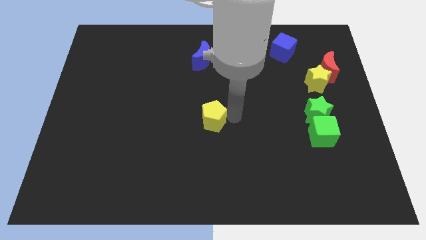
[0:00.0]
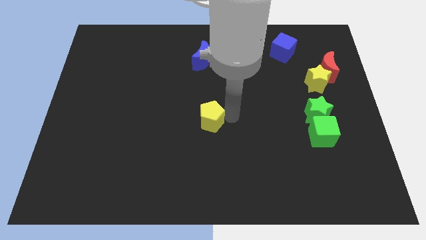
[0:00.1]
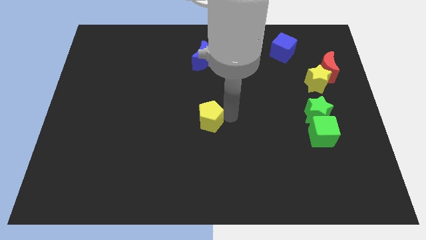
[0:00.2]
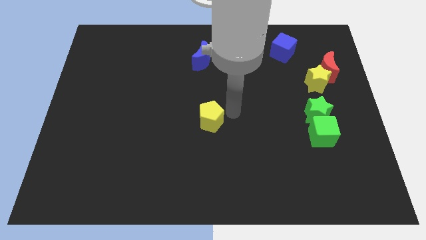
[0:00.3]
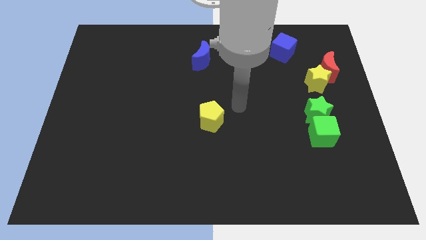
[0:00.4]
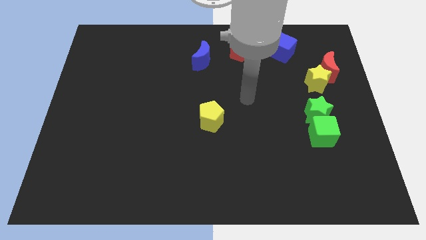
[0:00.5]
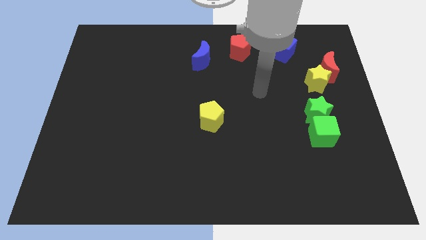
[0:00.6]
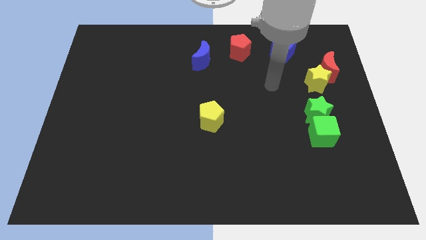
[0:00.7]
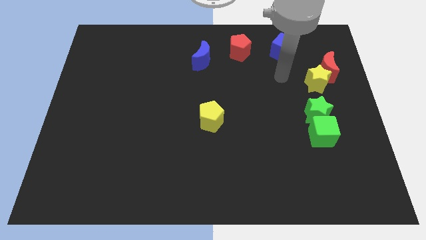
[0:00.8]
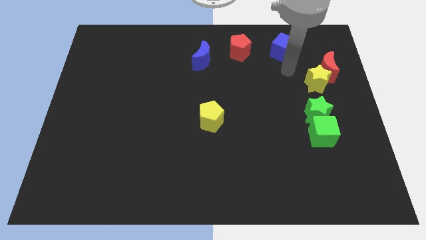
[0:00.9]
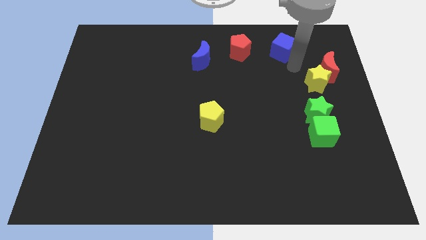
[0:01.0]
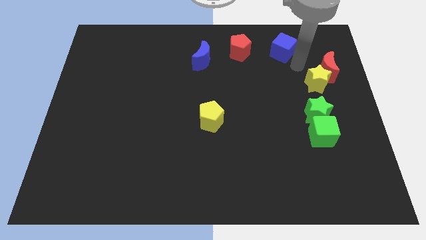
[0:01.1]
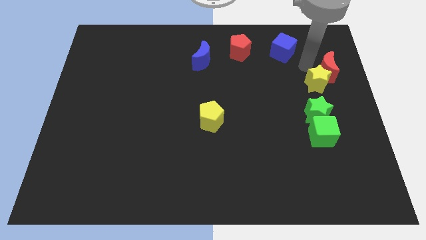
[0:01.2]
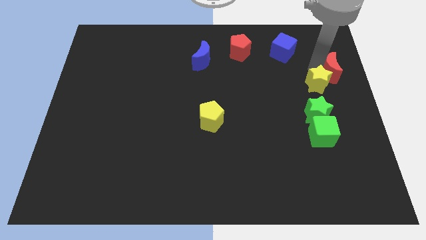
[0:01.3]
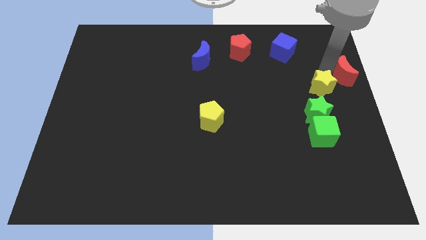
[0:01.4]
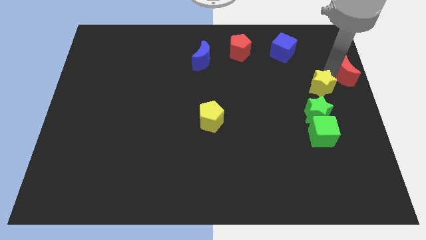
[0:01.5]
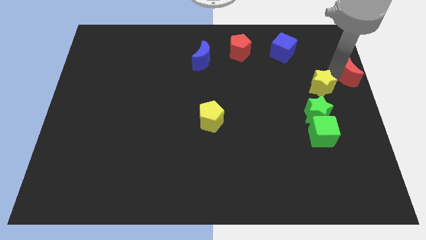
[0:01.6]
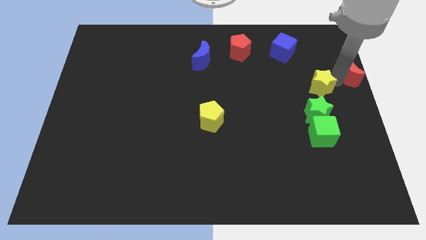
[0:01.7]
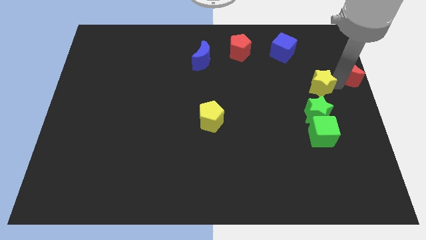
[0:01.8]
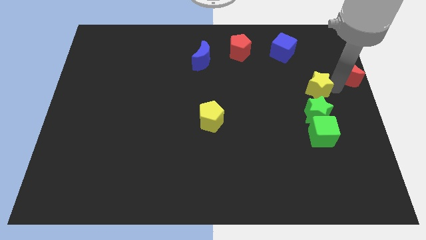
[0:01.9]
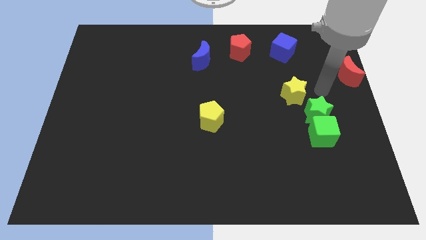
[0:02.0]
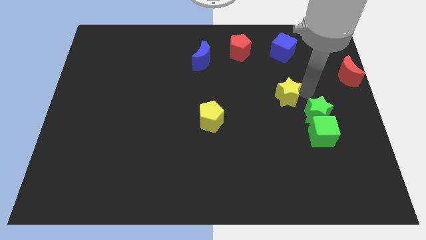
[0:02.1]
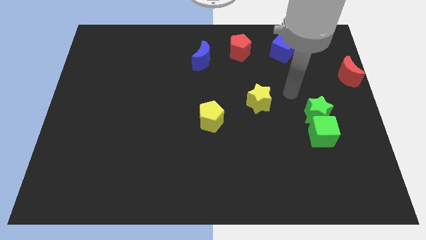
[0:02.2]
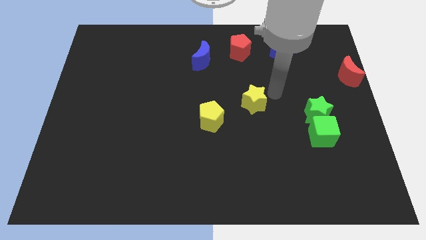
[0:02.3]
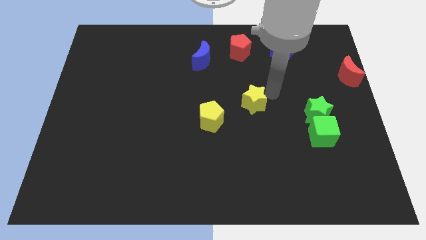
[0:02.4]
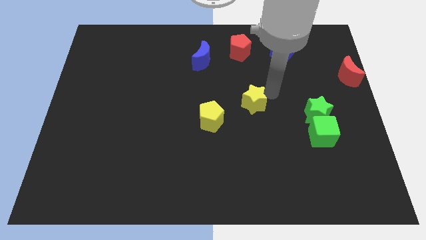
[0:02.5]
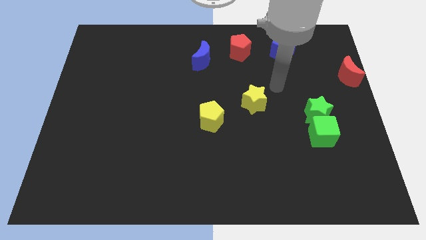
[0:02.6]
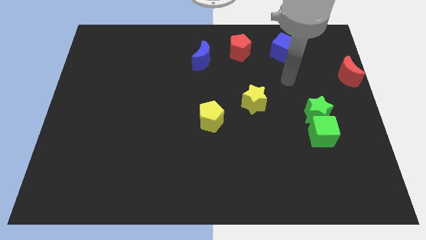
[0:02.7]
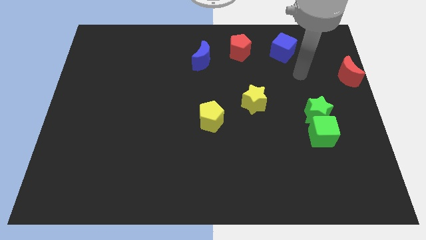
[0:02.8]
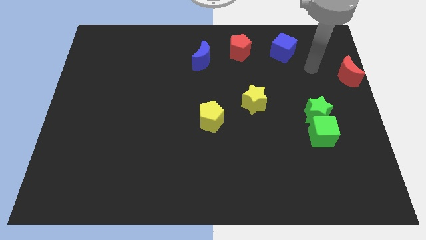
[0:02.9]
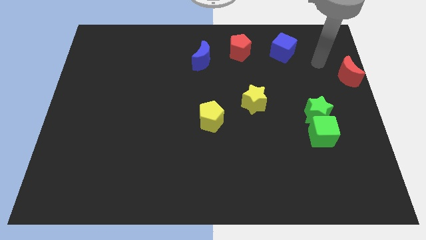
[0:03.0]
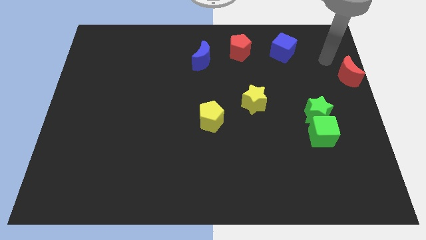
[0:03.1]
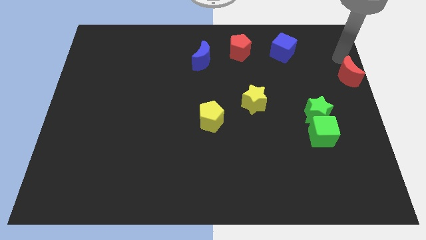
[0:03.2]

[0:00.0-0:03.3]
drag yellow pentagon towards the middle of the board

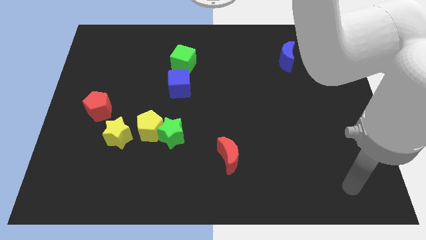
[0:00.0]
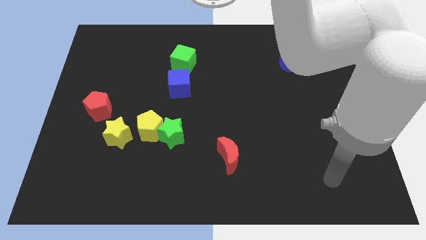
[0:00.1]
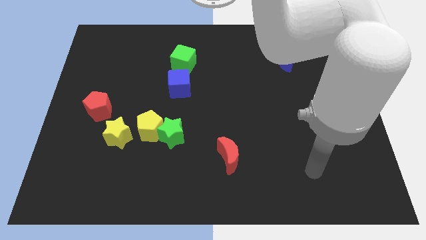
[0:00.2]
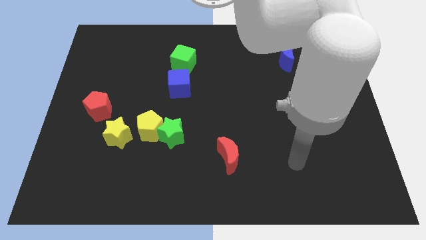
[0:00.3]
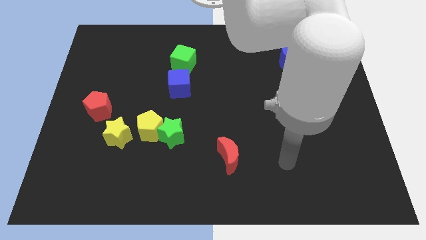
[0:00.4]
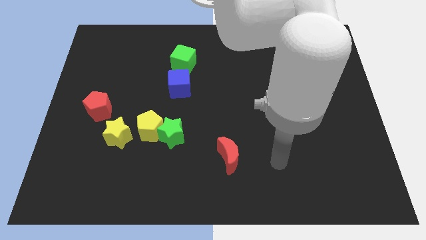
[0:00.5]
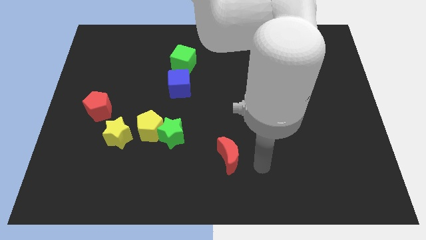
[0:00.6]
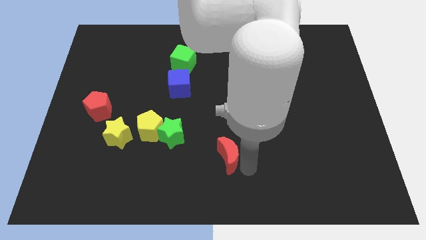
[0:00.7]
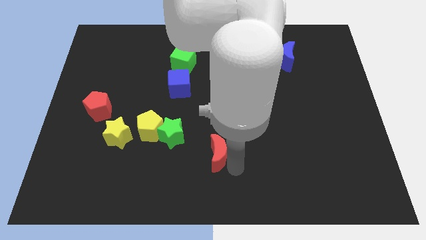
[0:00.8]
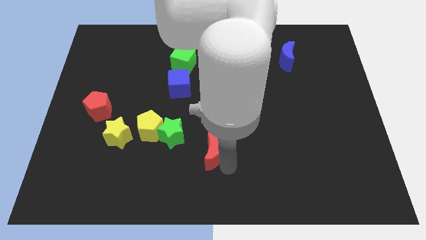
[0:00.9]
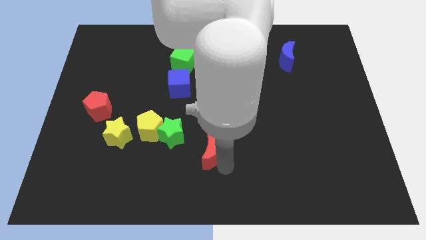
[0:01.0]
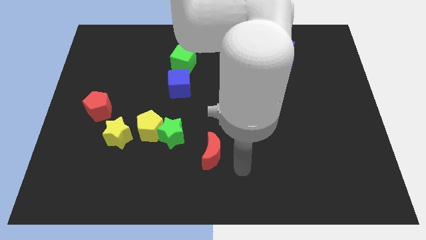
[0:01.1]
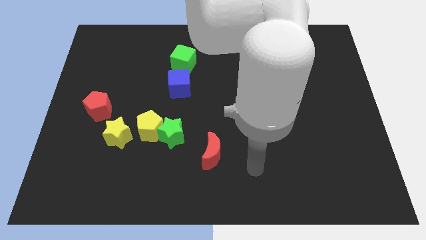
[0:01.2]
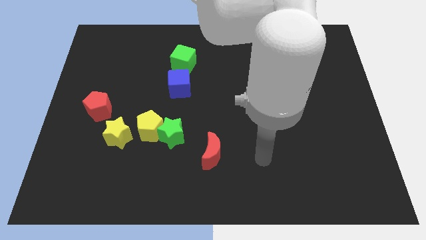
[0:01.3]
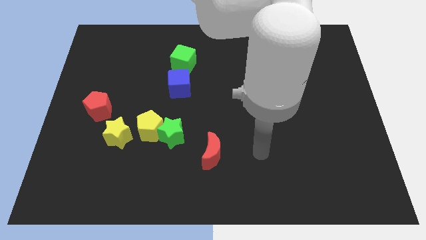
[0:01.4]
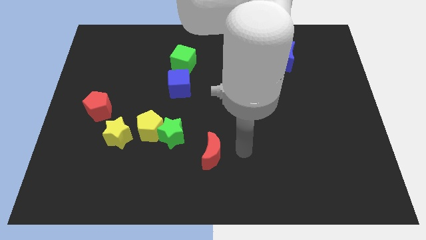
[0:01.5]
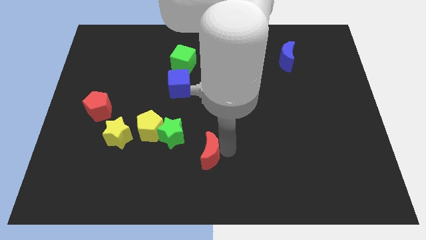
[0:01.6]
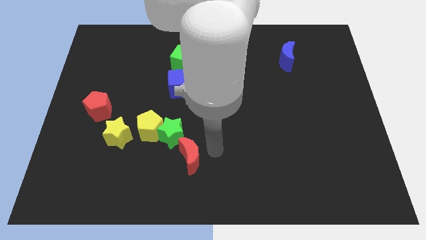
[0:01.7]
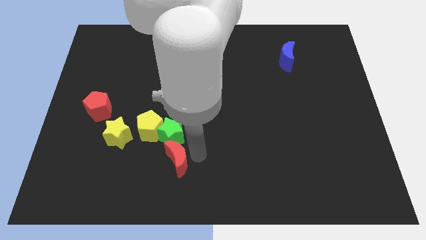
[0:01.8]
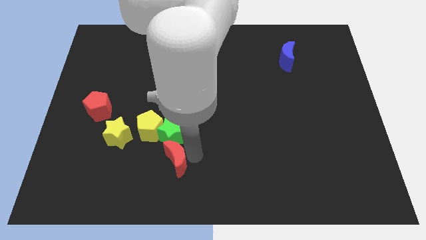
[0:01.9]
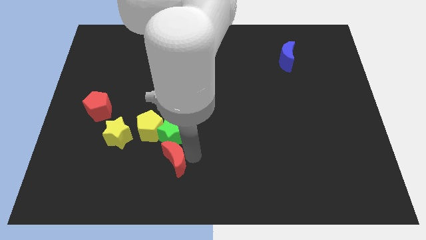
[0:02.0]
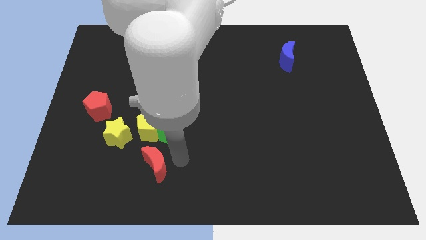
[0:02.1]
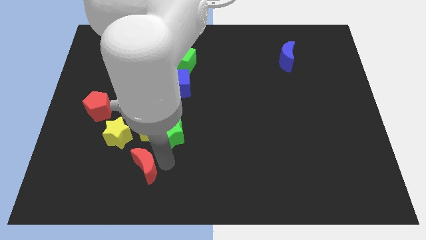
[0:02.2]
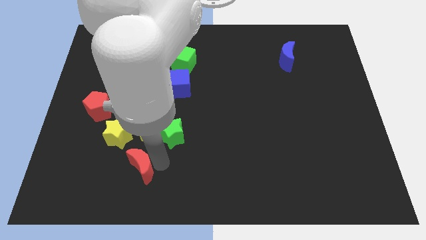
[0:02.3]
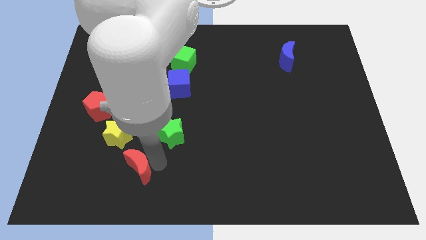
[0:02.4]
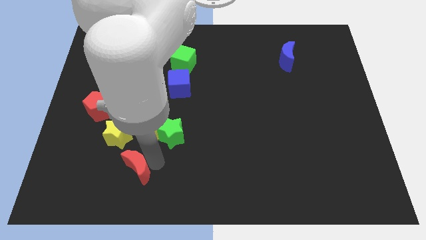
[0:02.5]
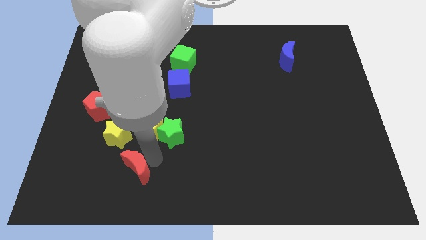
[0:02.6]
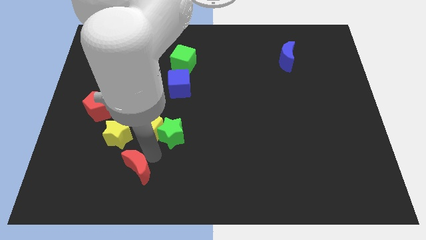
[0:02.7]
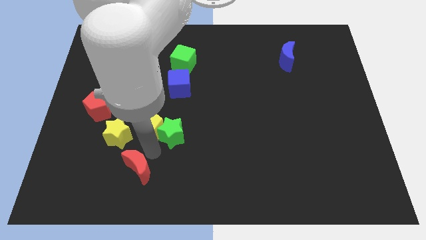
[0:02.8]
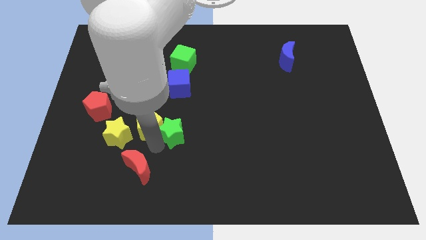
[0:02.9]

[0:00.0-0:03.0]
push the red moon towards the bottom left

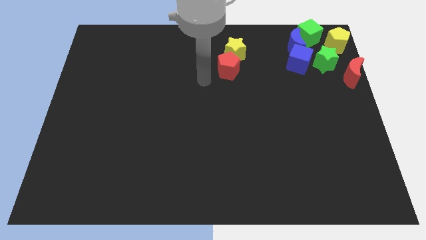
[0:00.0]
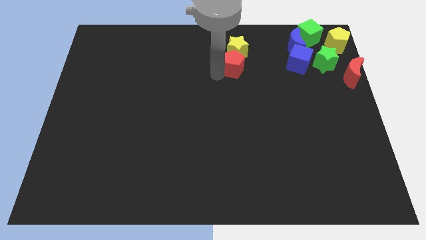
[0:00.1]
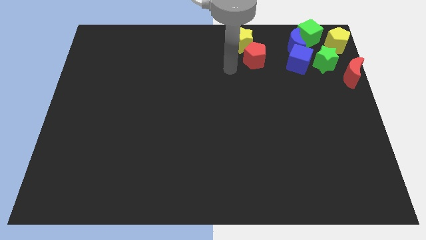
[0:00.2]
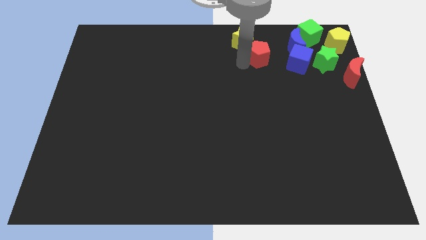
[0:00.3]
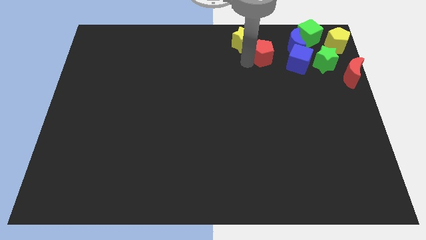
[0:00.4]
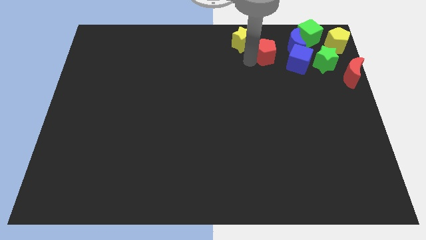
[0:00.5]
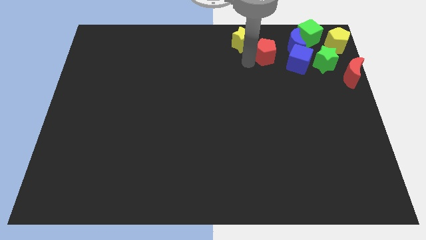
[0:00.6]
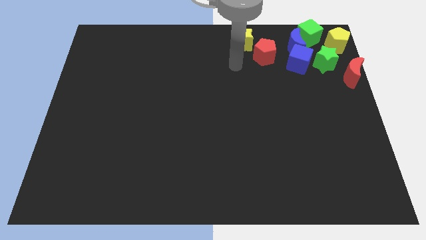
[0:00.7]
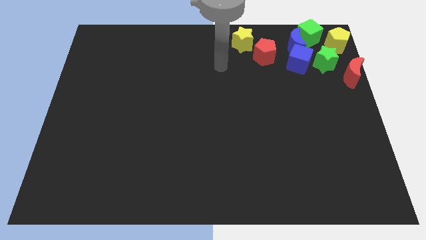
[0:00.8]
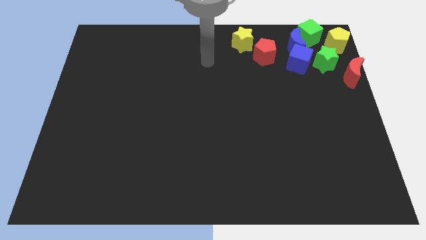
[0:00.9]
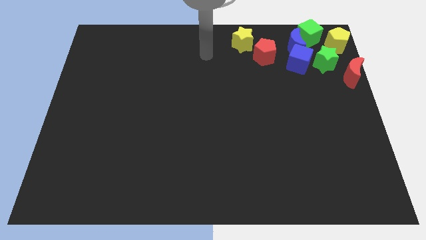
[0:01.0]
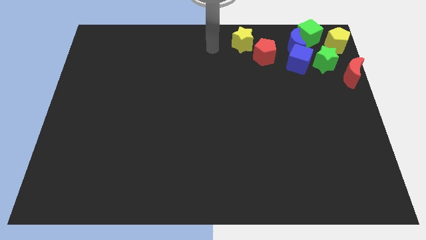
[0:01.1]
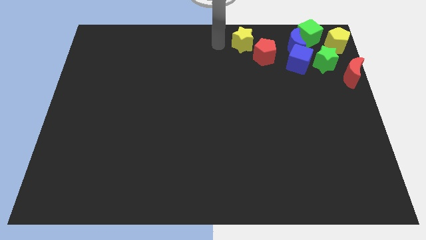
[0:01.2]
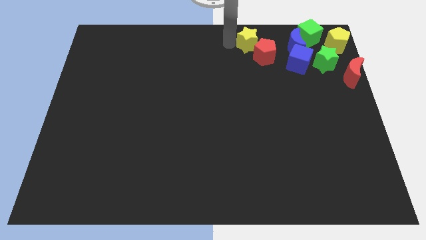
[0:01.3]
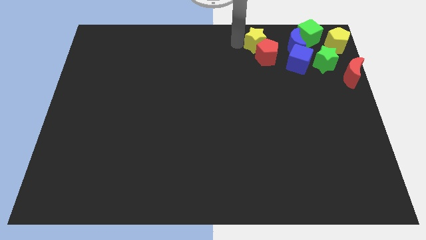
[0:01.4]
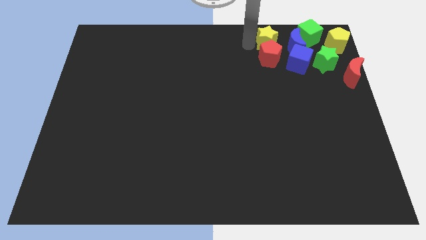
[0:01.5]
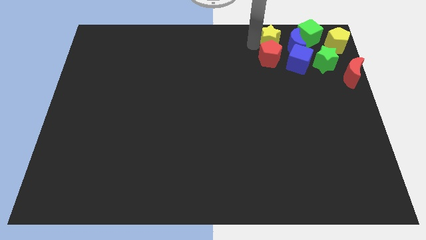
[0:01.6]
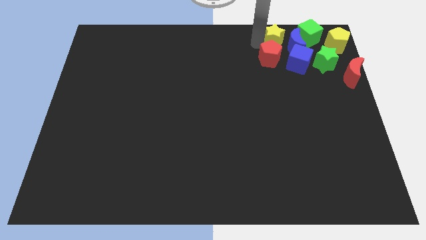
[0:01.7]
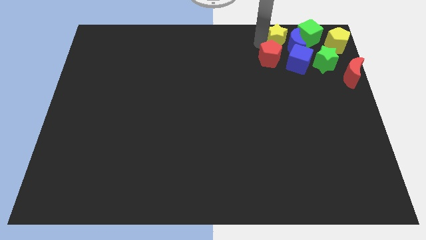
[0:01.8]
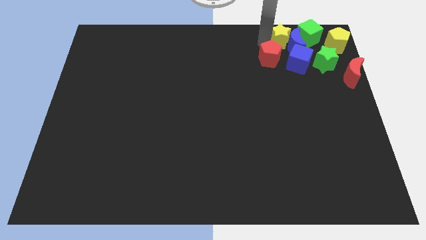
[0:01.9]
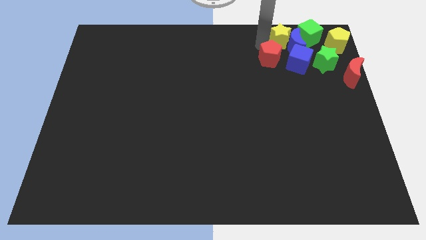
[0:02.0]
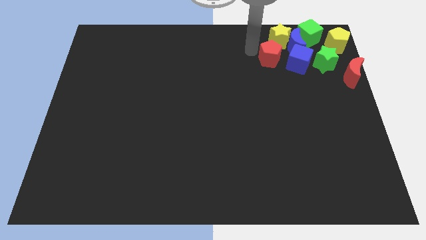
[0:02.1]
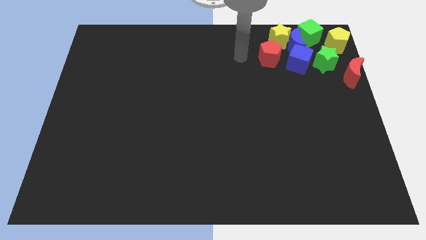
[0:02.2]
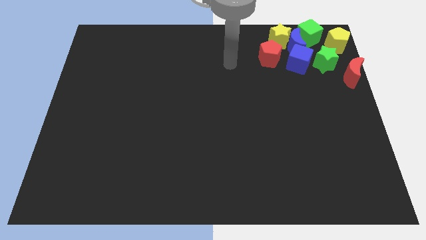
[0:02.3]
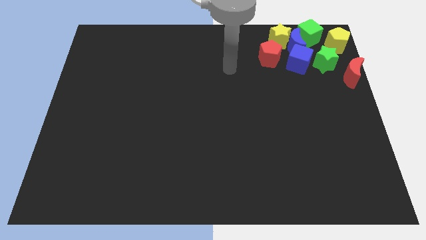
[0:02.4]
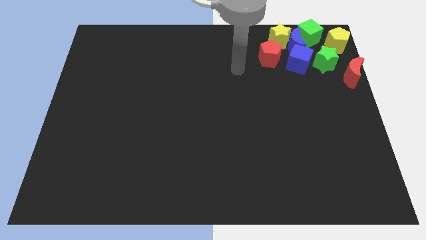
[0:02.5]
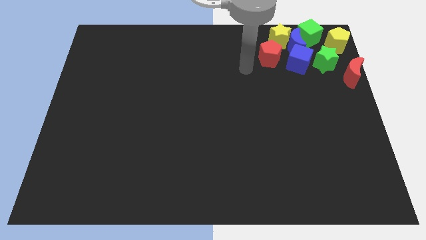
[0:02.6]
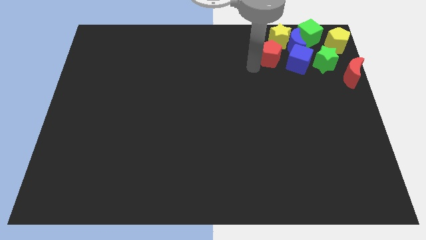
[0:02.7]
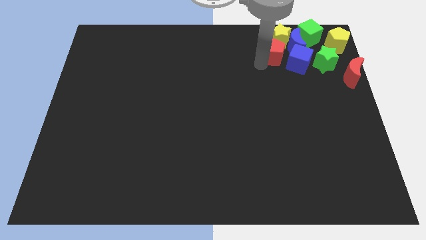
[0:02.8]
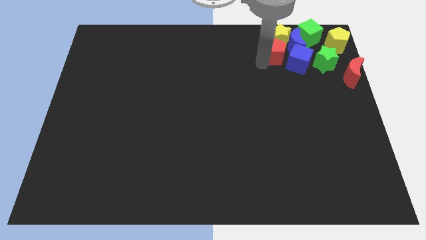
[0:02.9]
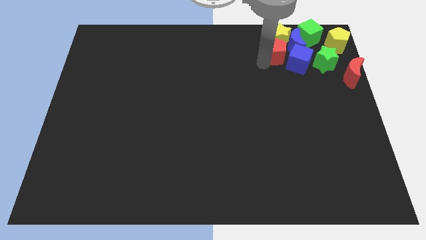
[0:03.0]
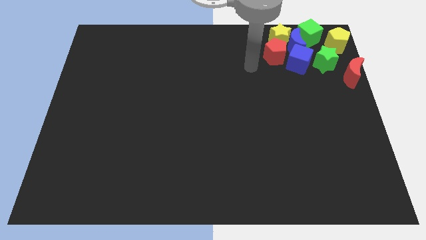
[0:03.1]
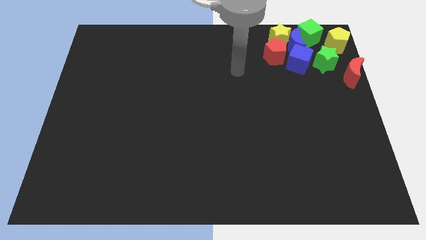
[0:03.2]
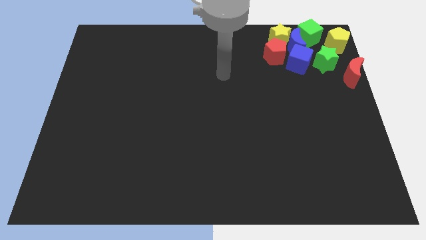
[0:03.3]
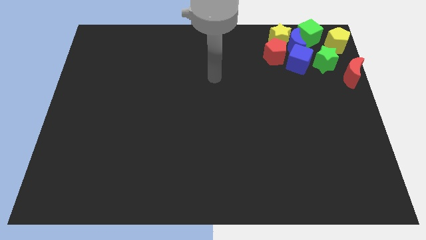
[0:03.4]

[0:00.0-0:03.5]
push the yellow star and red pentagon into blue blocks
